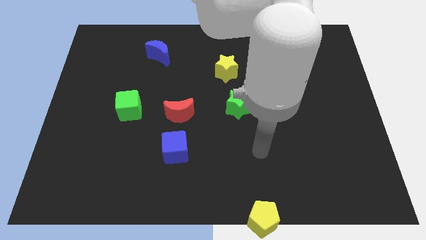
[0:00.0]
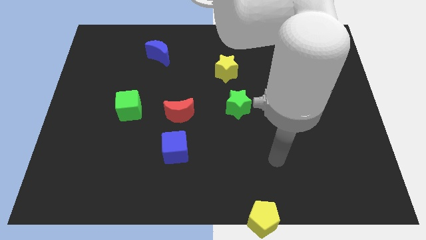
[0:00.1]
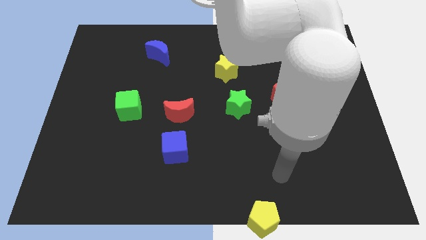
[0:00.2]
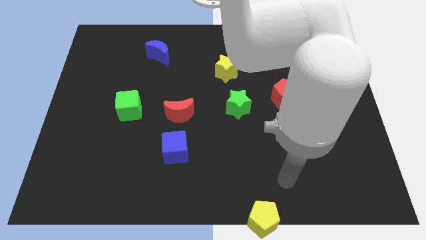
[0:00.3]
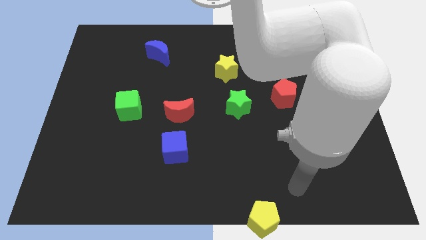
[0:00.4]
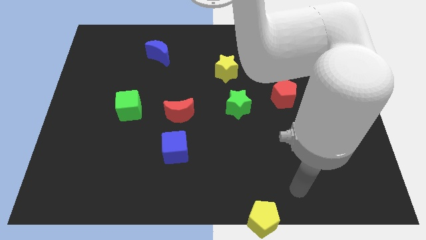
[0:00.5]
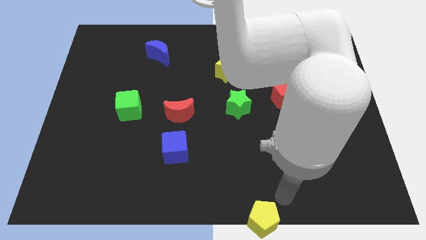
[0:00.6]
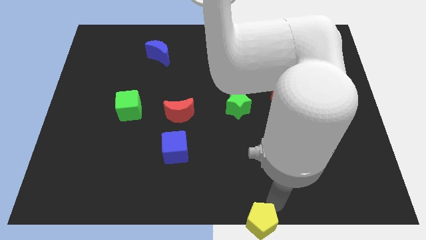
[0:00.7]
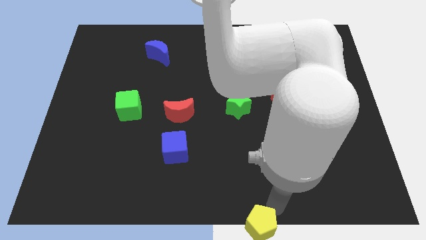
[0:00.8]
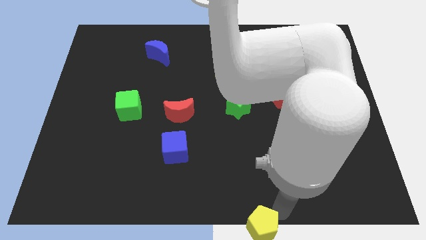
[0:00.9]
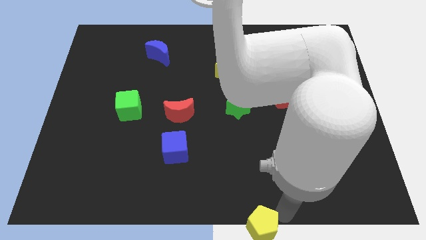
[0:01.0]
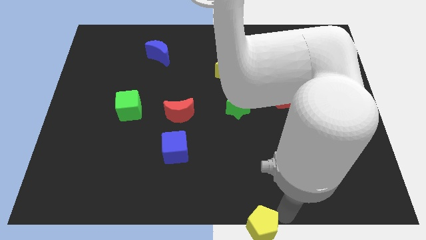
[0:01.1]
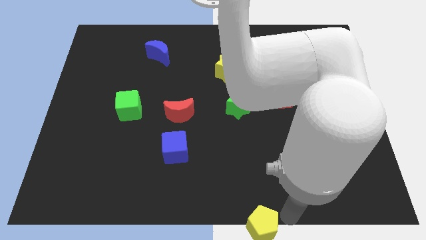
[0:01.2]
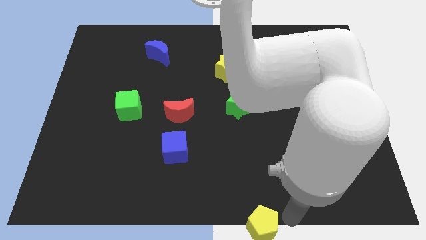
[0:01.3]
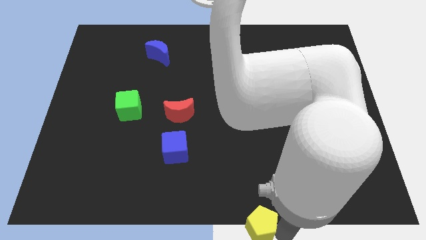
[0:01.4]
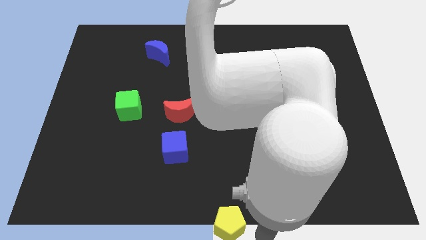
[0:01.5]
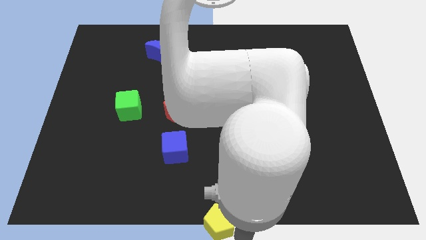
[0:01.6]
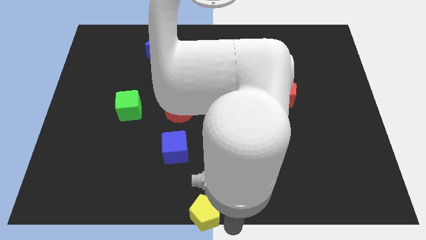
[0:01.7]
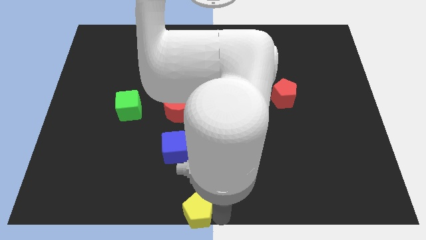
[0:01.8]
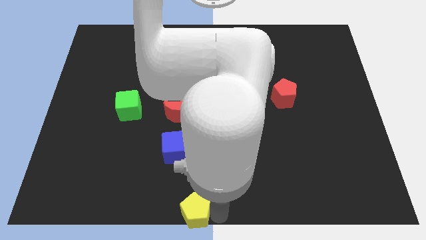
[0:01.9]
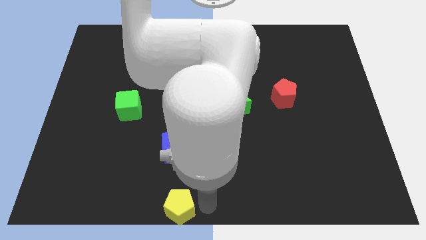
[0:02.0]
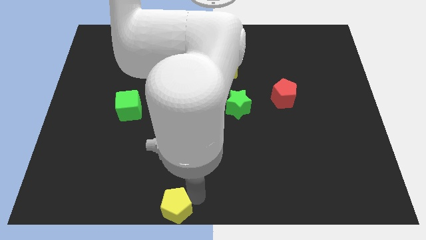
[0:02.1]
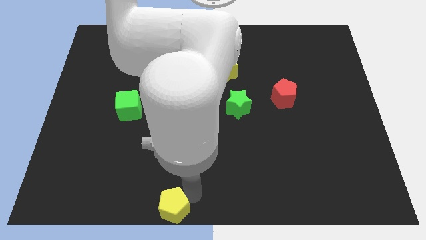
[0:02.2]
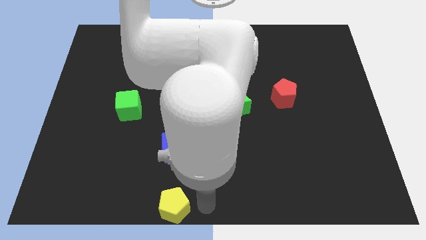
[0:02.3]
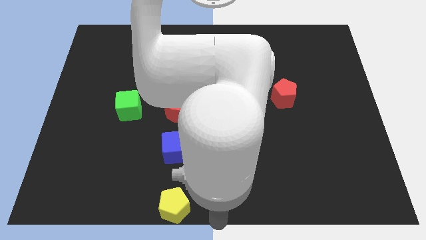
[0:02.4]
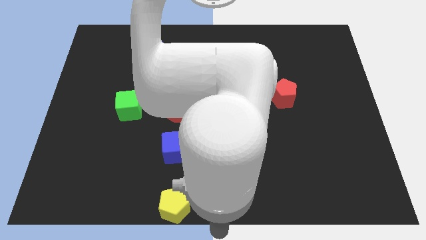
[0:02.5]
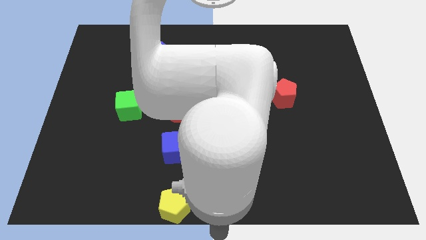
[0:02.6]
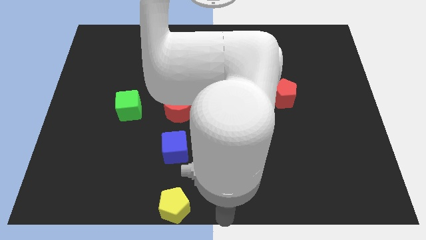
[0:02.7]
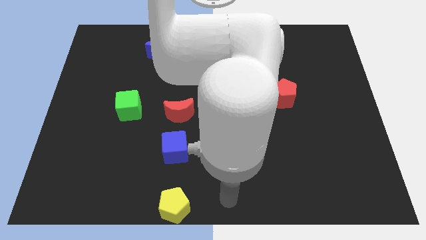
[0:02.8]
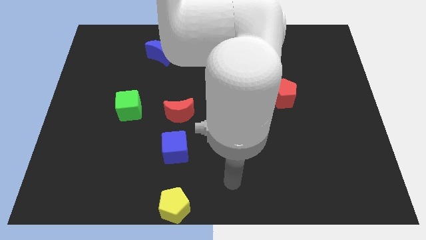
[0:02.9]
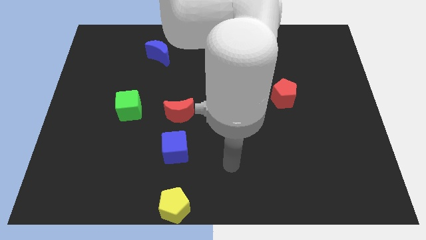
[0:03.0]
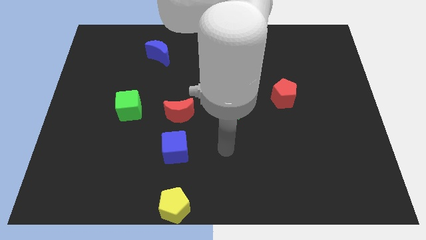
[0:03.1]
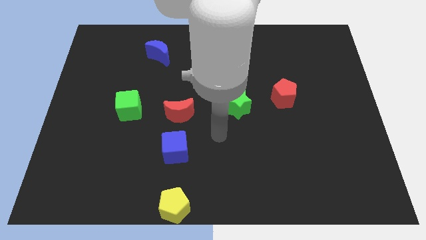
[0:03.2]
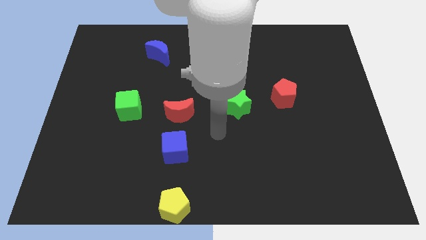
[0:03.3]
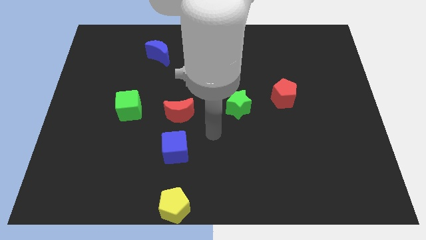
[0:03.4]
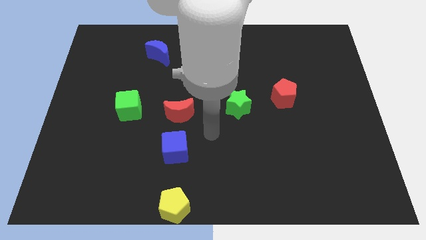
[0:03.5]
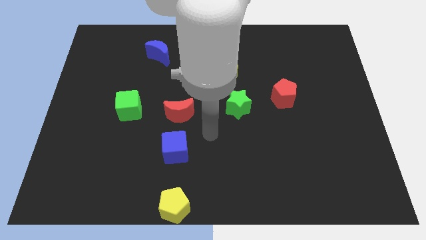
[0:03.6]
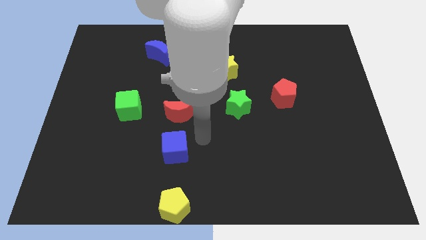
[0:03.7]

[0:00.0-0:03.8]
place the yellow pentagon down to the blue cube

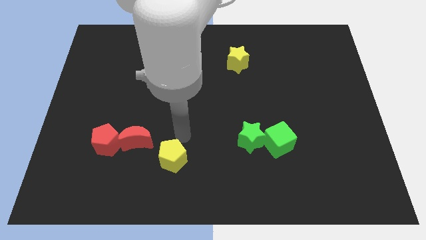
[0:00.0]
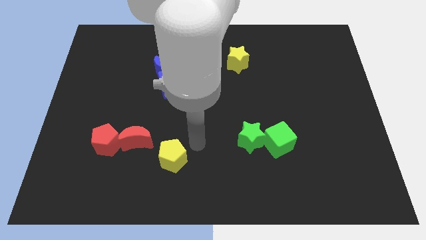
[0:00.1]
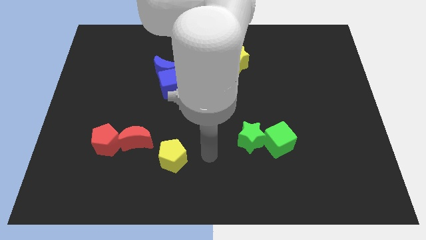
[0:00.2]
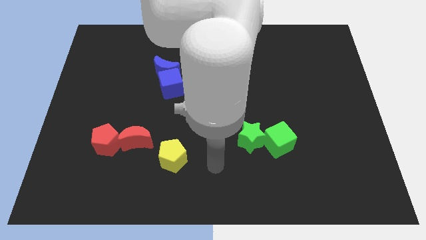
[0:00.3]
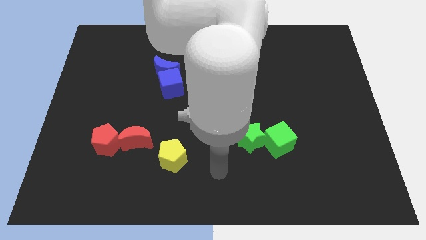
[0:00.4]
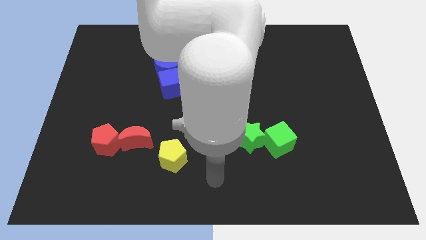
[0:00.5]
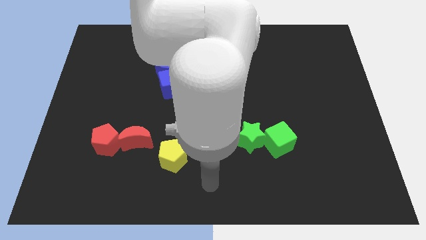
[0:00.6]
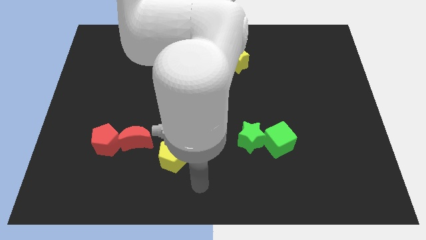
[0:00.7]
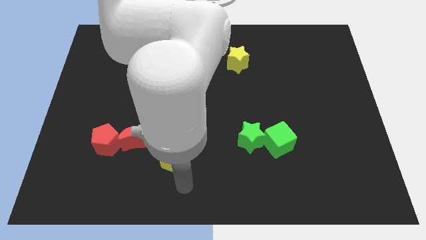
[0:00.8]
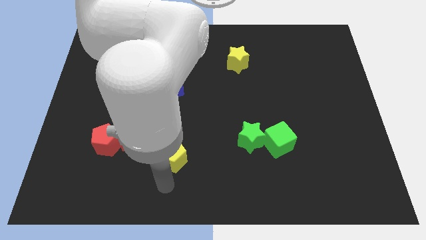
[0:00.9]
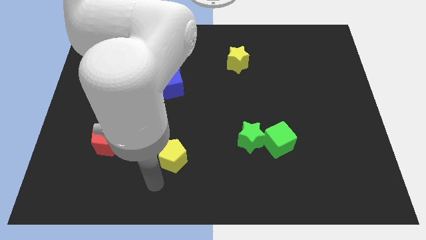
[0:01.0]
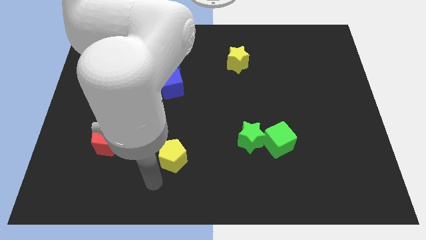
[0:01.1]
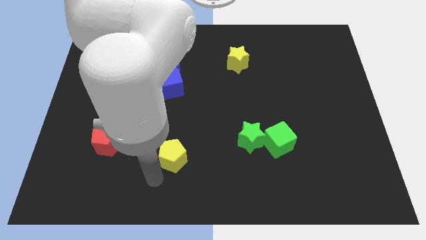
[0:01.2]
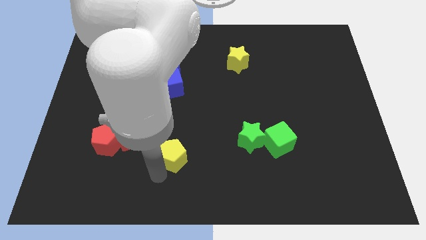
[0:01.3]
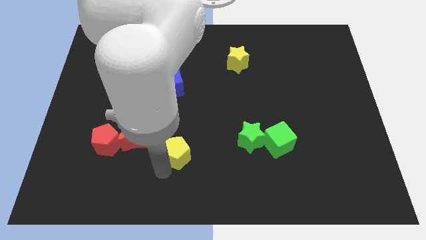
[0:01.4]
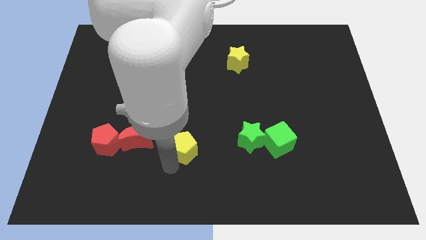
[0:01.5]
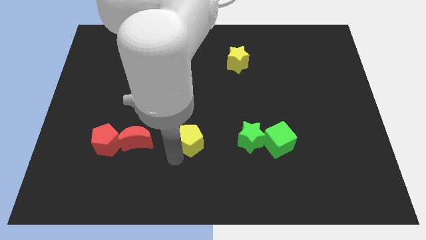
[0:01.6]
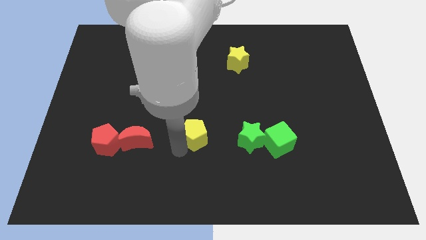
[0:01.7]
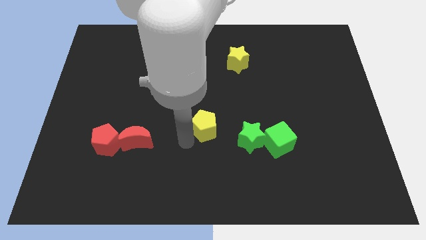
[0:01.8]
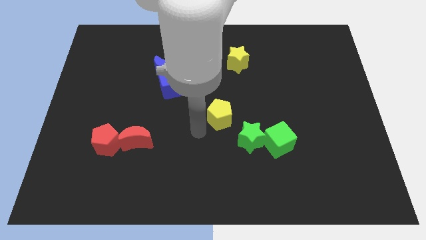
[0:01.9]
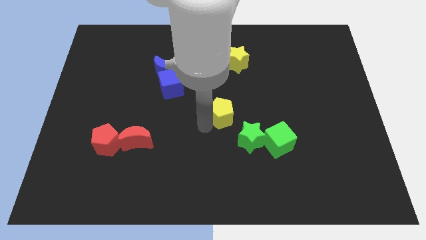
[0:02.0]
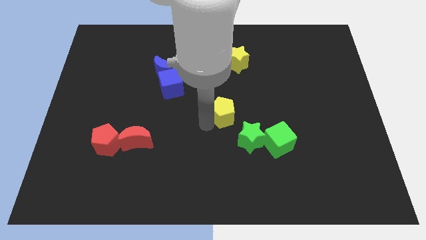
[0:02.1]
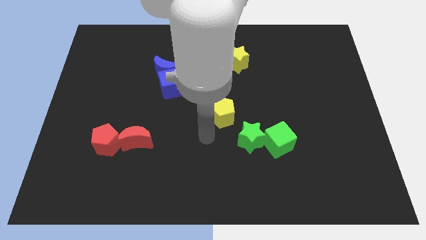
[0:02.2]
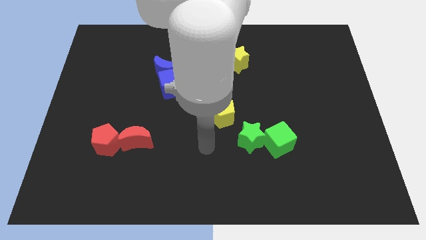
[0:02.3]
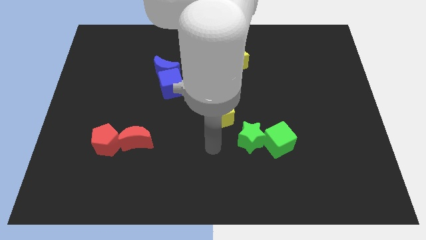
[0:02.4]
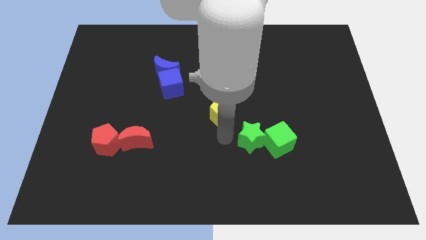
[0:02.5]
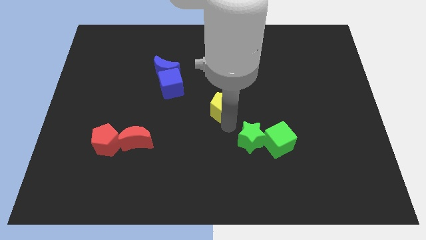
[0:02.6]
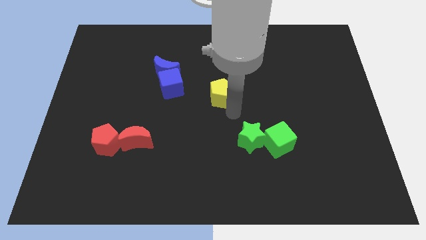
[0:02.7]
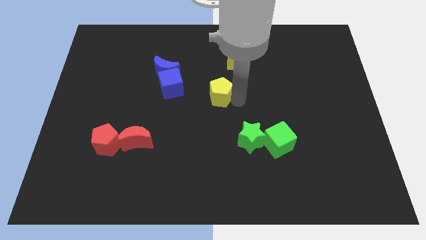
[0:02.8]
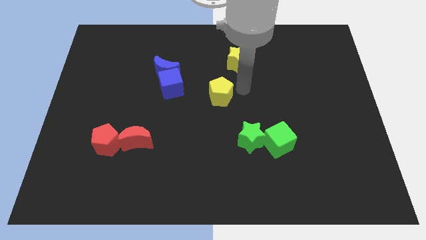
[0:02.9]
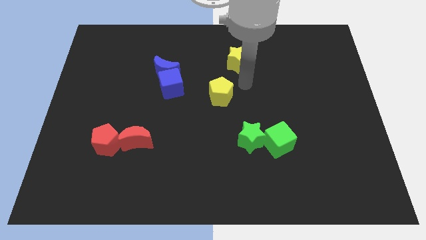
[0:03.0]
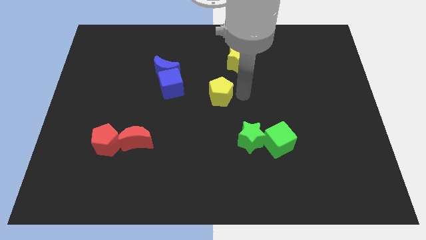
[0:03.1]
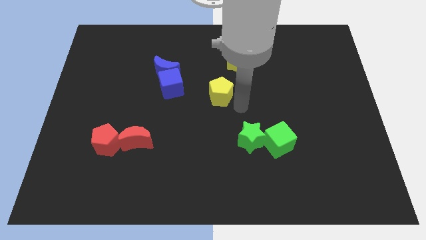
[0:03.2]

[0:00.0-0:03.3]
put the yellow pentagon at the center of the board

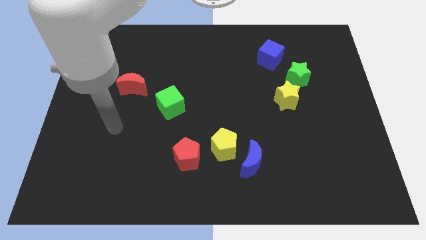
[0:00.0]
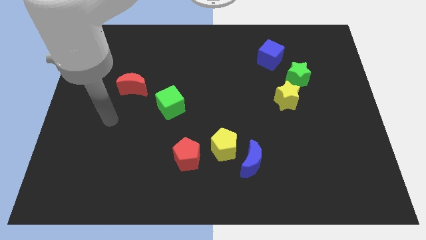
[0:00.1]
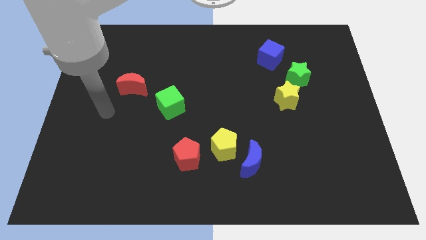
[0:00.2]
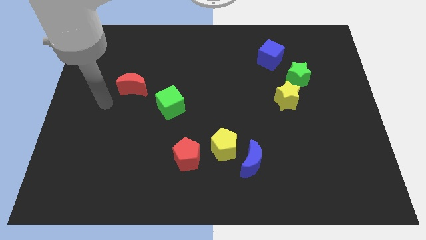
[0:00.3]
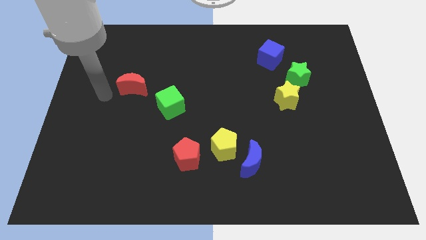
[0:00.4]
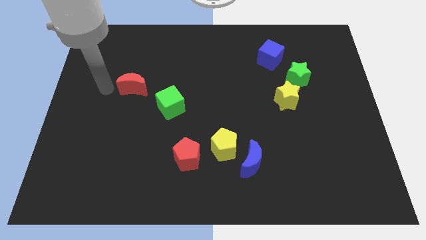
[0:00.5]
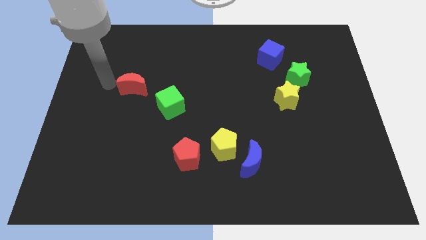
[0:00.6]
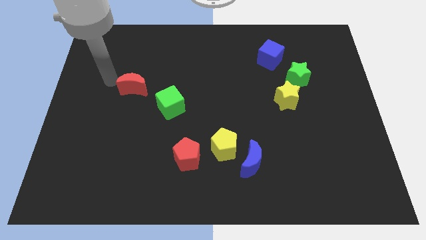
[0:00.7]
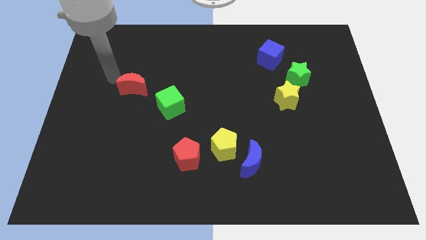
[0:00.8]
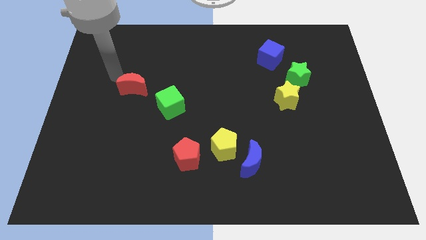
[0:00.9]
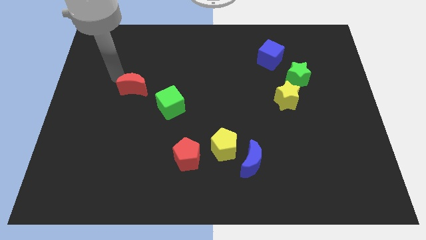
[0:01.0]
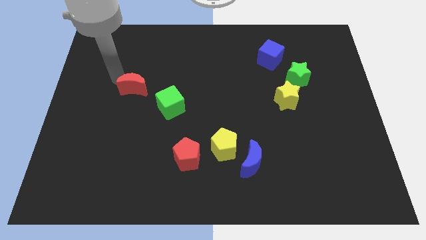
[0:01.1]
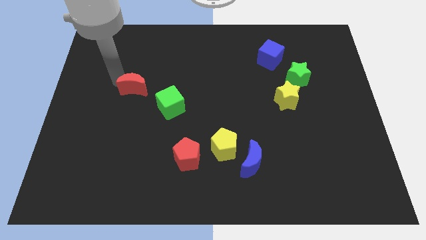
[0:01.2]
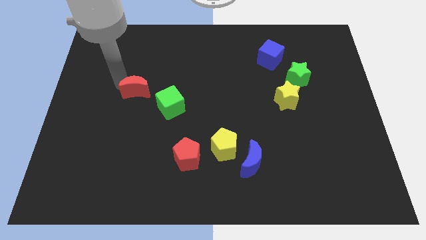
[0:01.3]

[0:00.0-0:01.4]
move your arm left above red moon

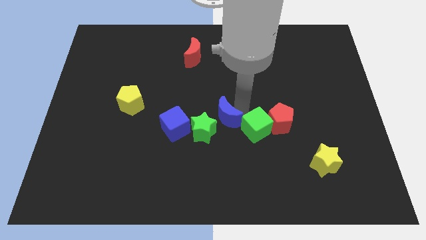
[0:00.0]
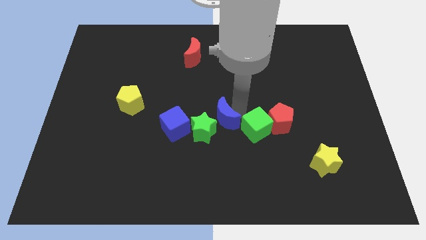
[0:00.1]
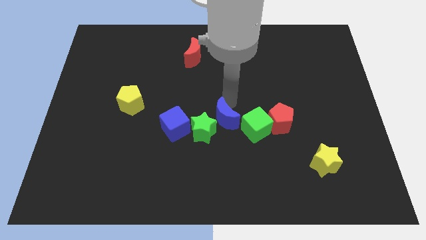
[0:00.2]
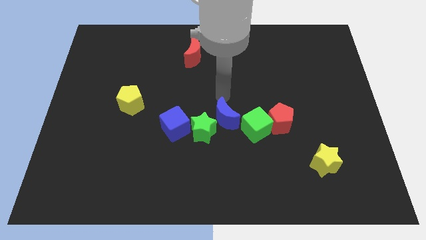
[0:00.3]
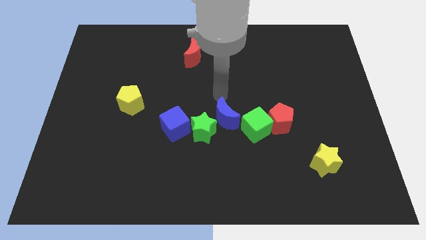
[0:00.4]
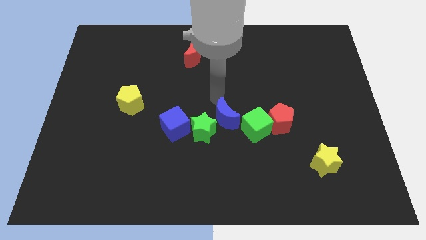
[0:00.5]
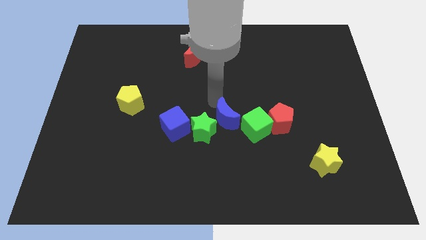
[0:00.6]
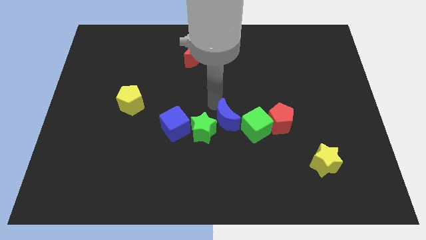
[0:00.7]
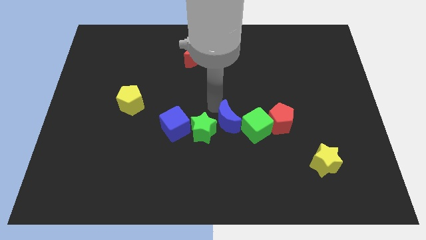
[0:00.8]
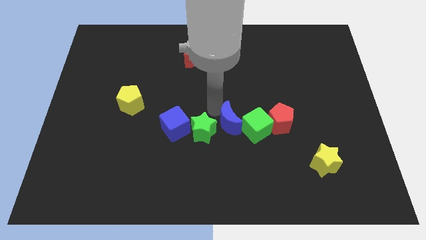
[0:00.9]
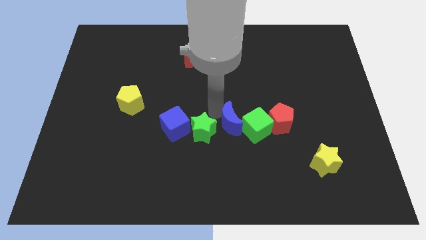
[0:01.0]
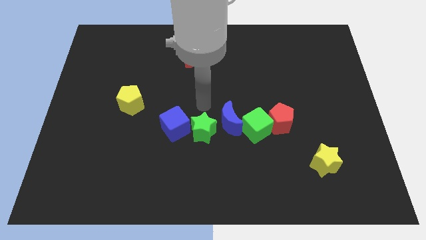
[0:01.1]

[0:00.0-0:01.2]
push the blue crescent into the center line
